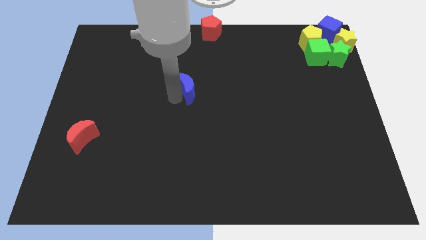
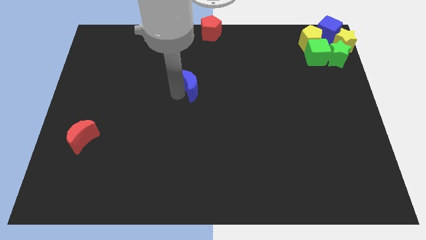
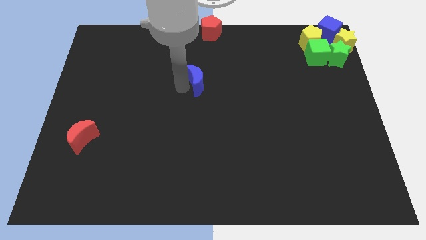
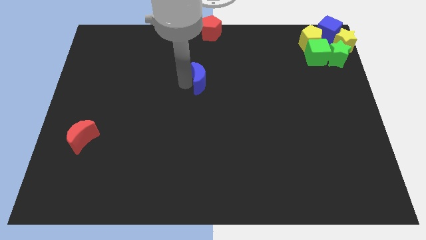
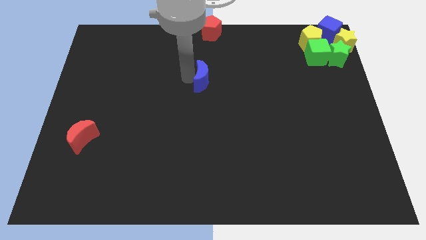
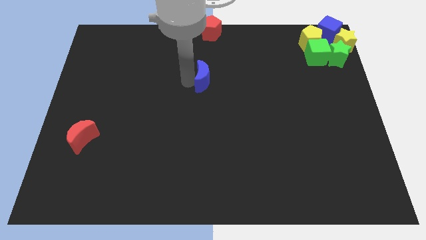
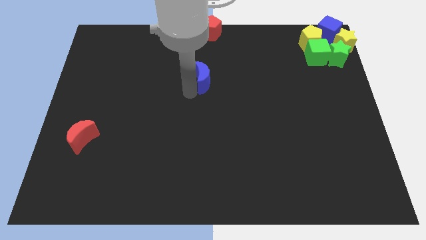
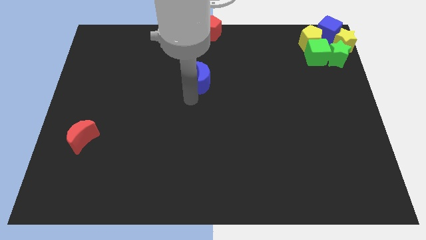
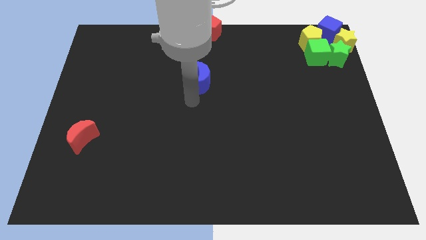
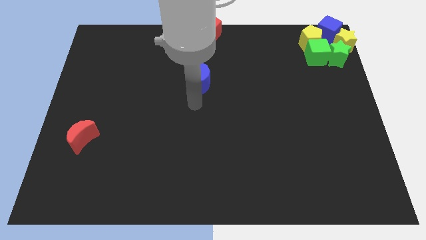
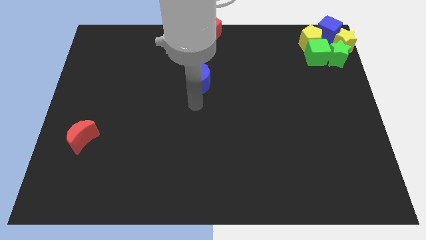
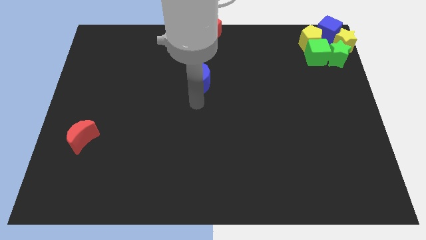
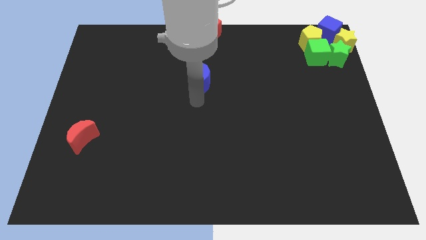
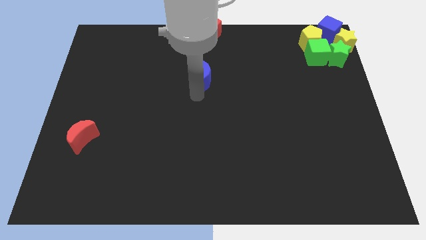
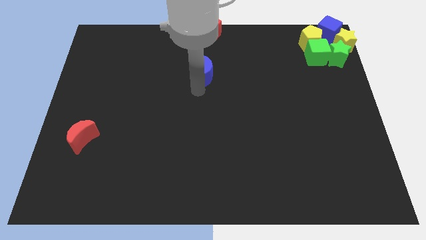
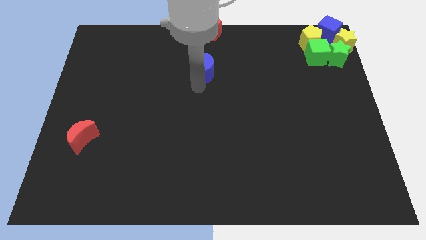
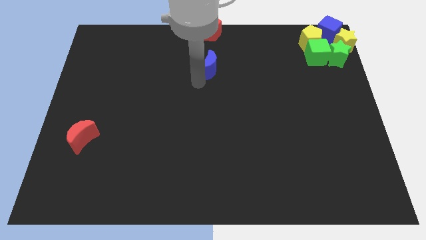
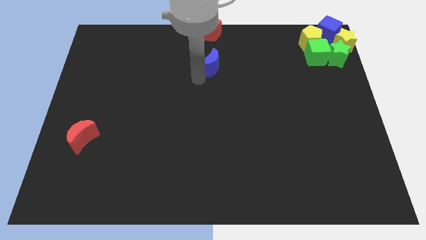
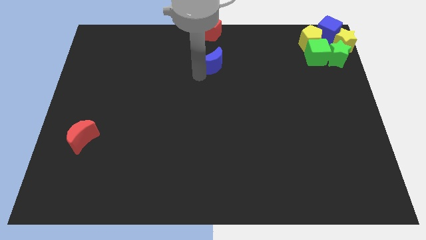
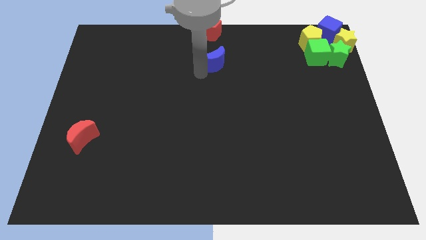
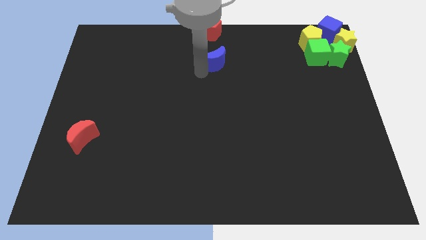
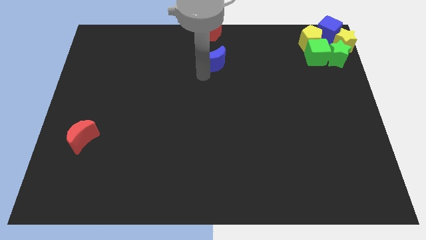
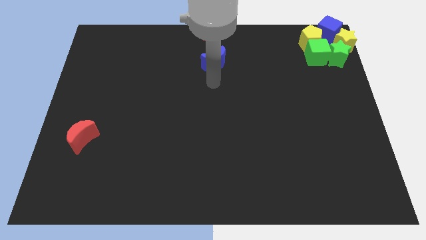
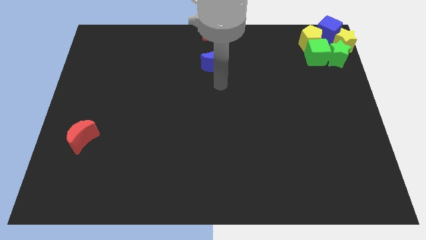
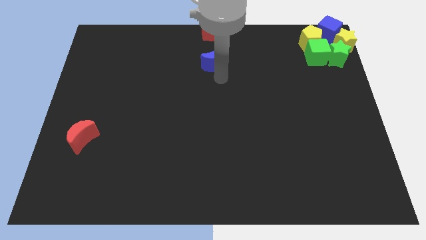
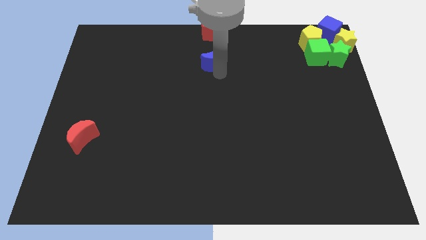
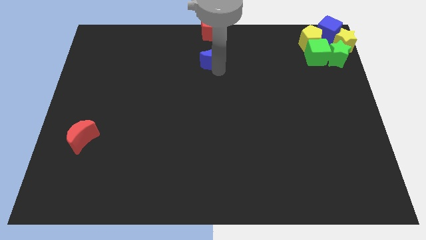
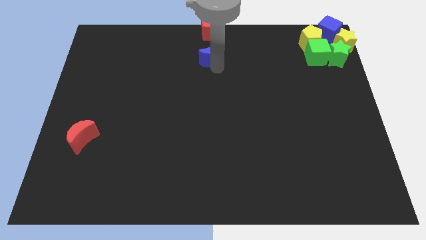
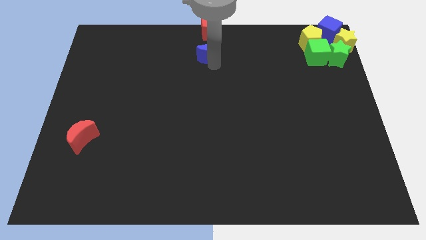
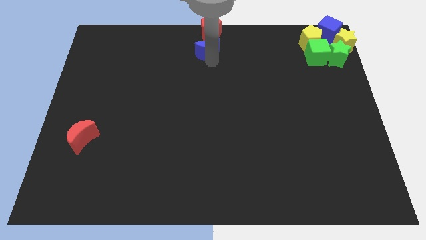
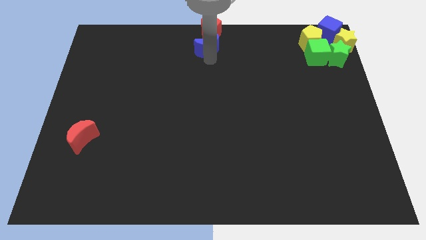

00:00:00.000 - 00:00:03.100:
move the blue moon towards the red pentagon

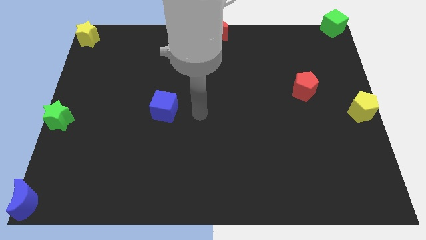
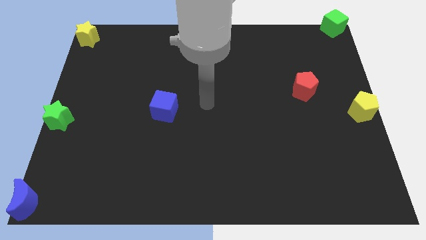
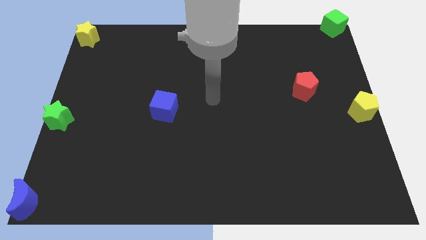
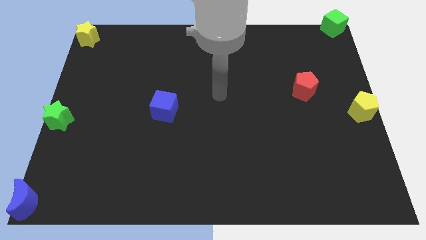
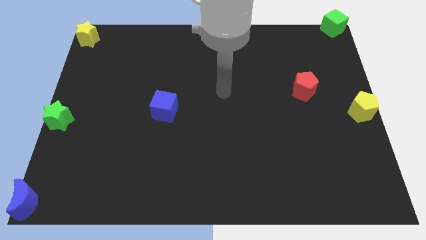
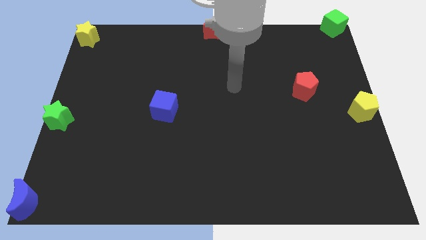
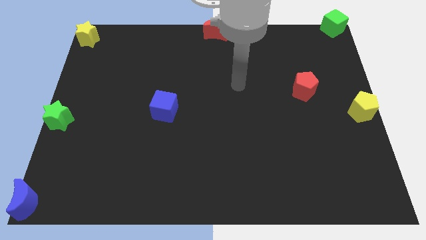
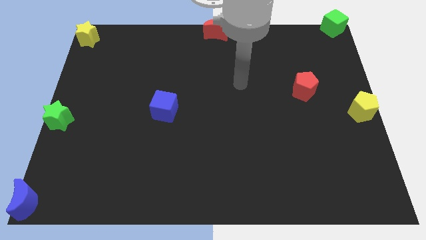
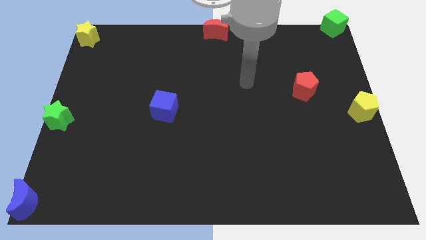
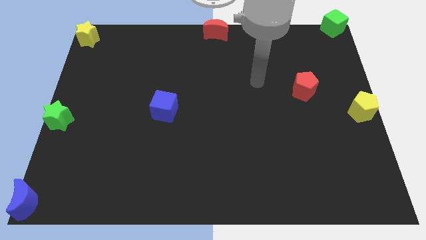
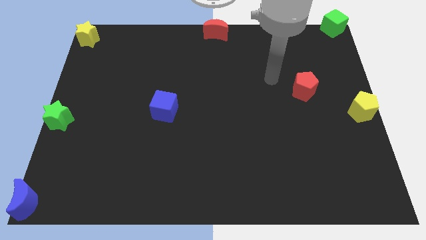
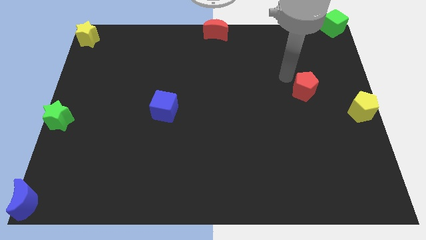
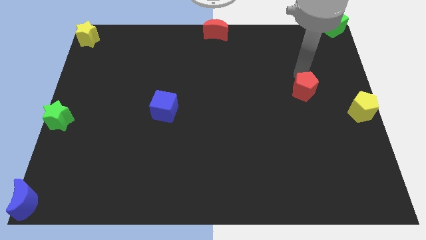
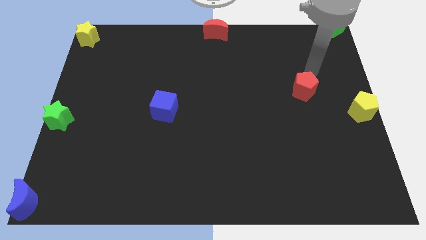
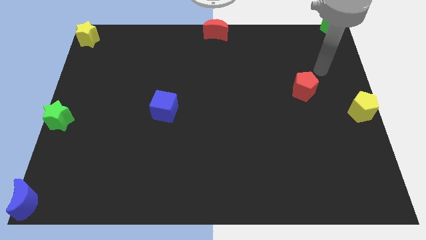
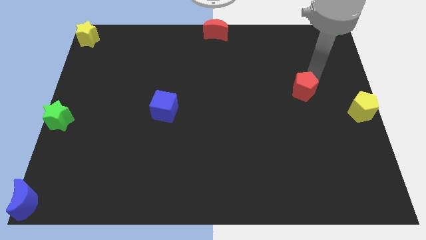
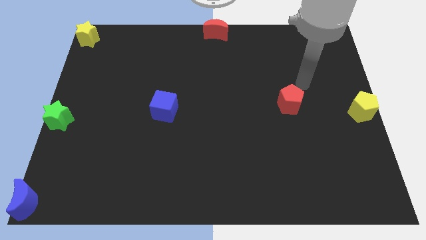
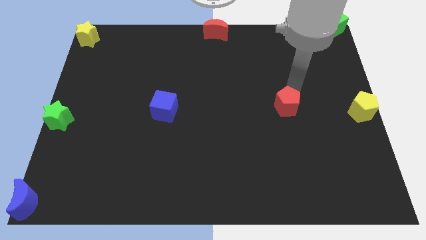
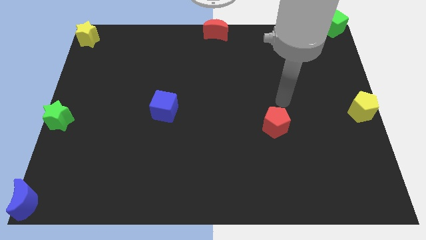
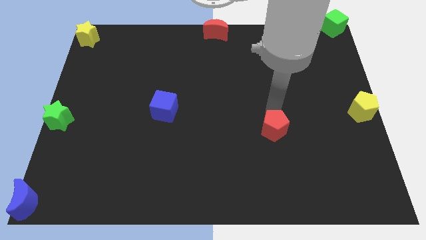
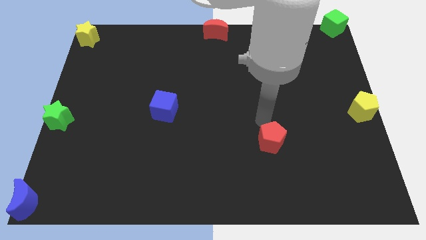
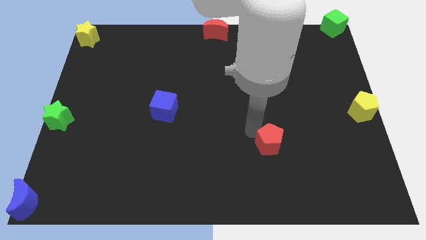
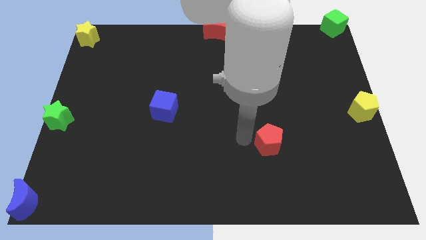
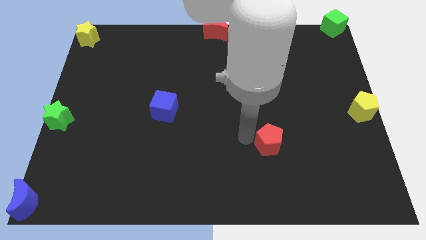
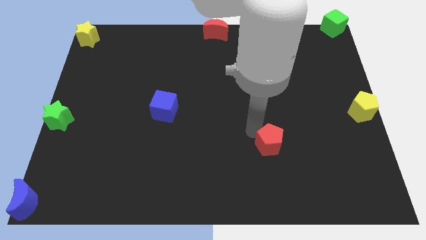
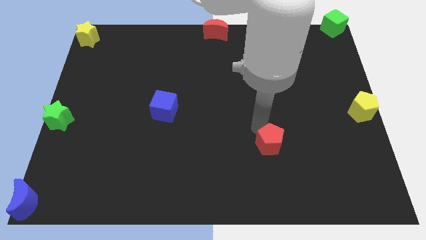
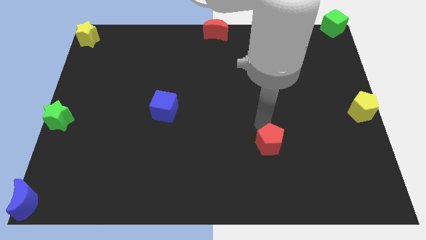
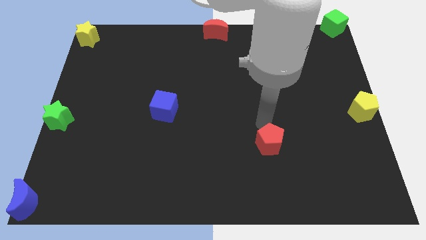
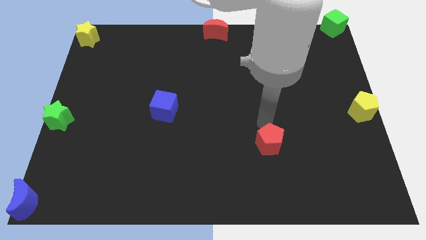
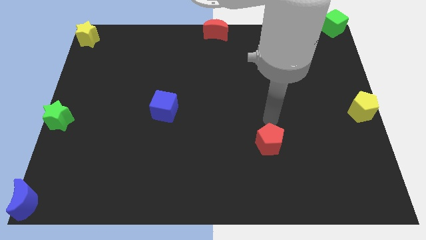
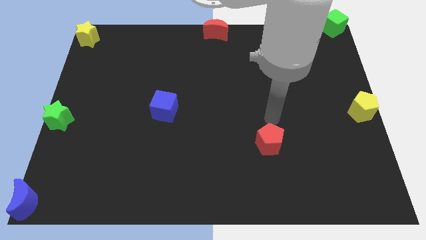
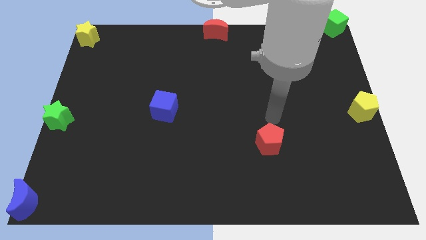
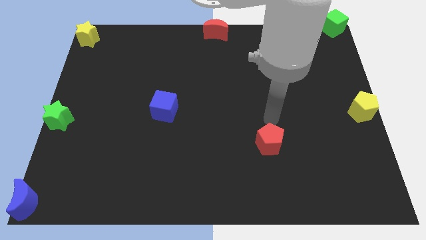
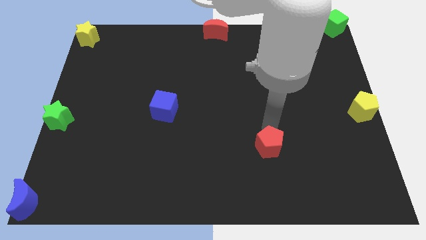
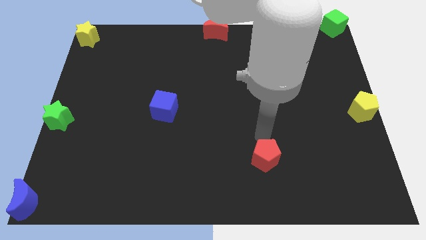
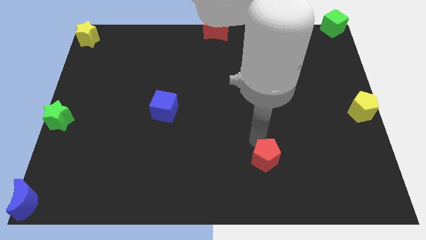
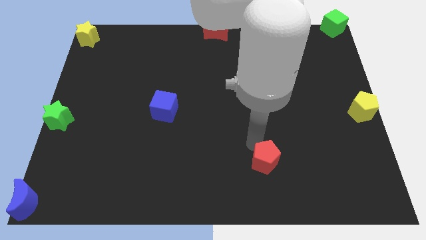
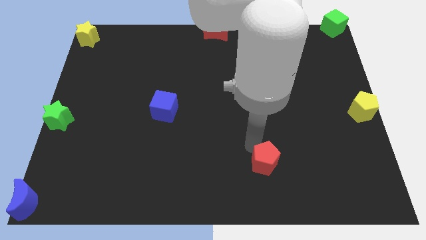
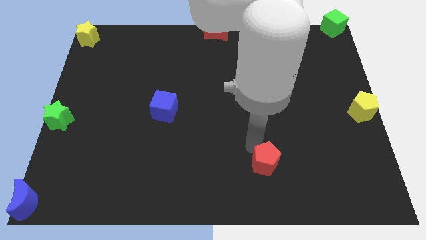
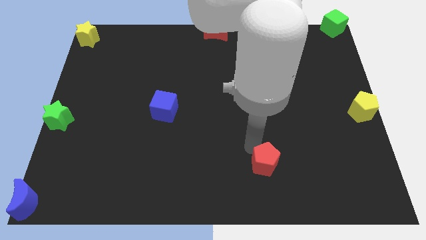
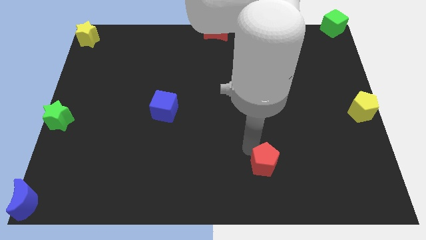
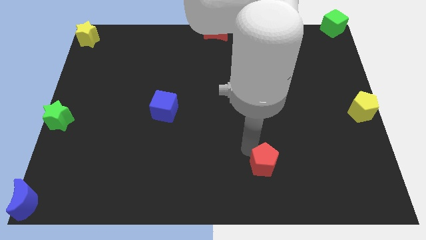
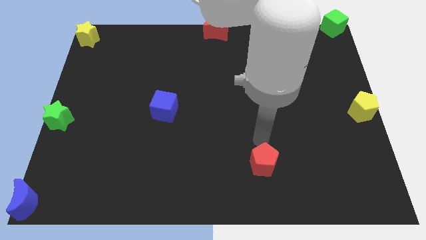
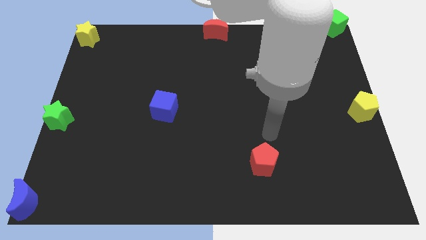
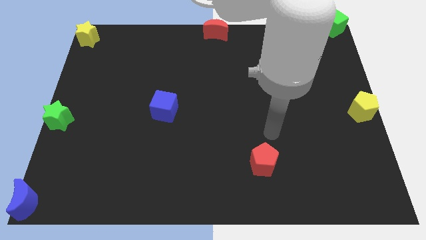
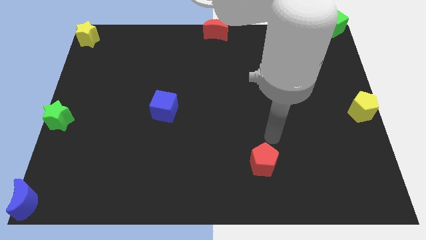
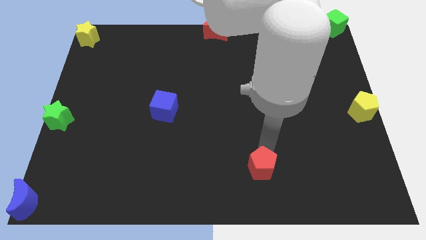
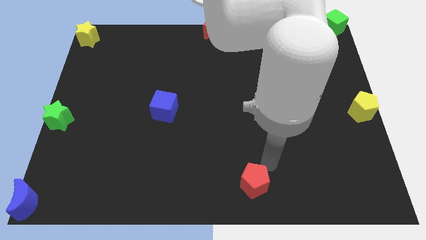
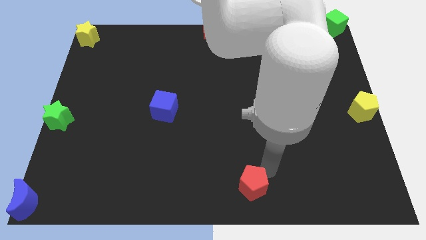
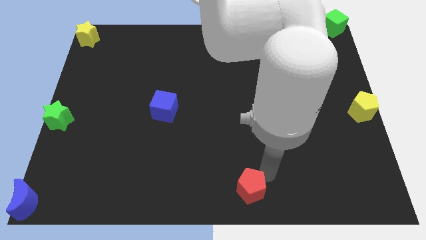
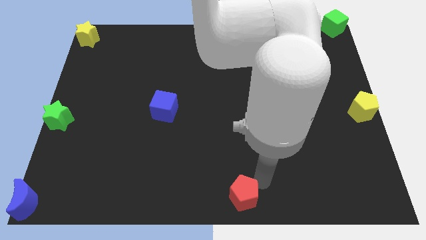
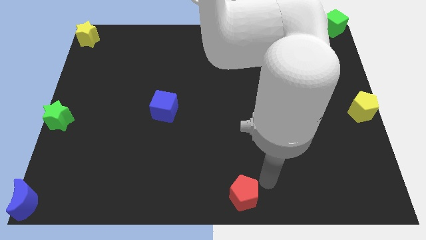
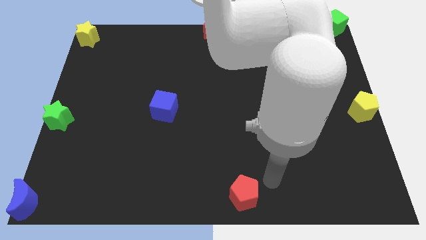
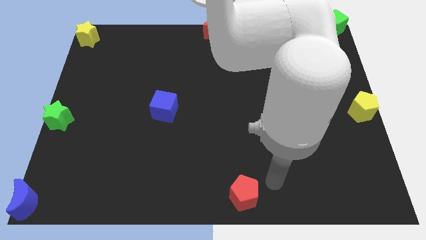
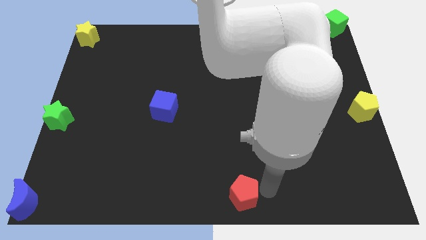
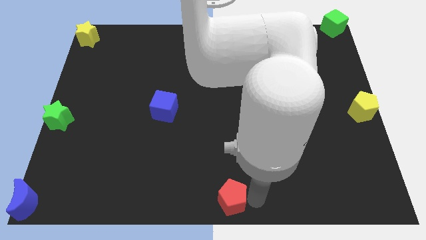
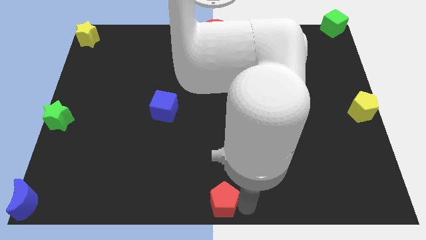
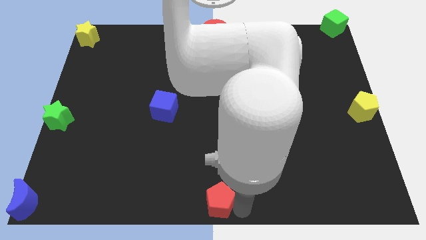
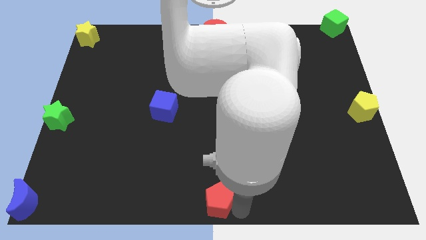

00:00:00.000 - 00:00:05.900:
place the red pentagon at the bottom center of the board
